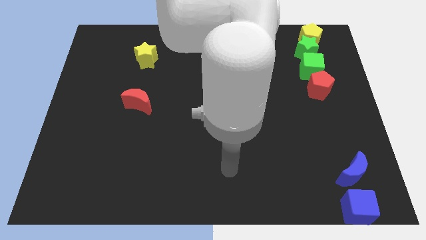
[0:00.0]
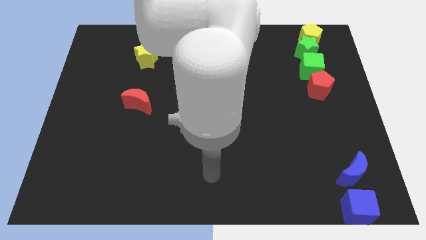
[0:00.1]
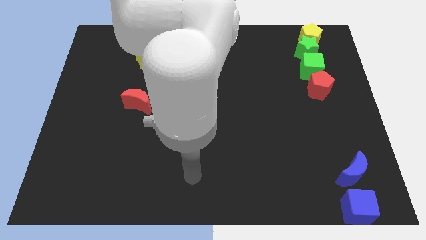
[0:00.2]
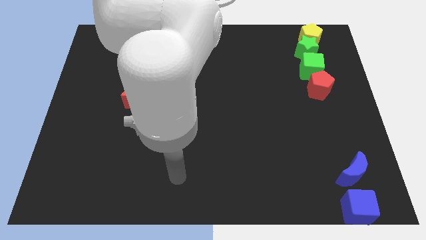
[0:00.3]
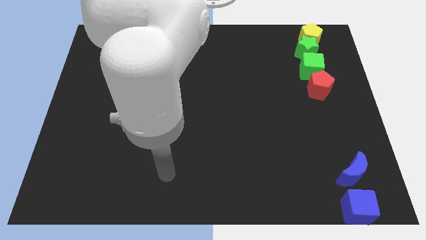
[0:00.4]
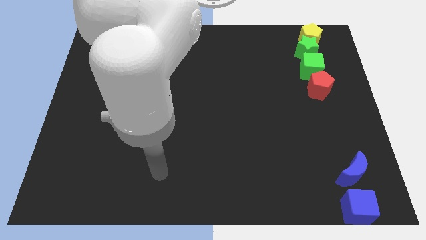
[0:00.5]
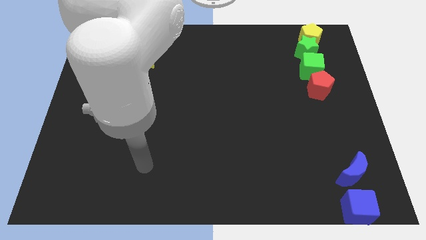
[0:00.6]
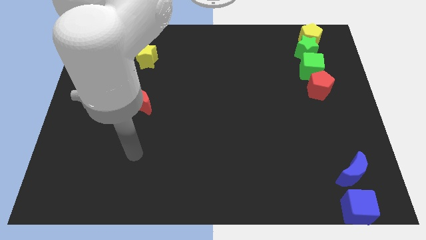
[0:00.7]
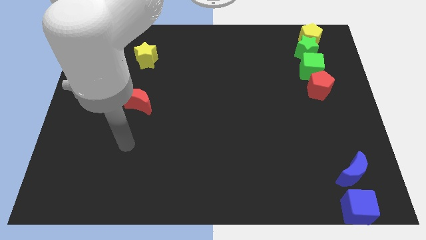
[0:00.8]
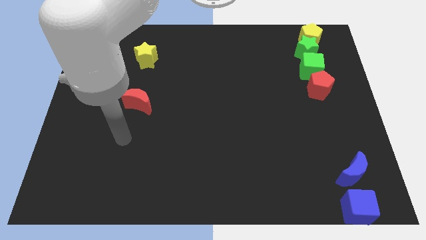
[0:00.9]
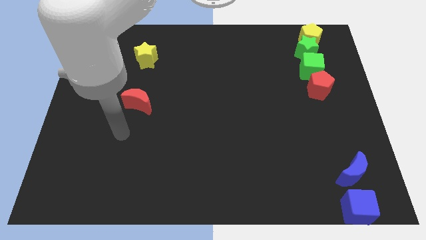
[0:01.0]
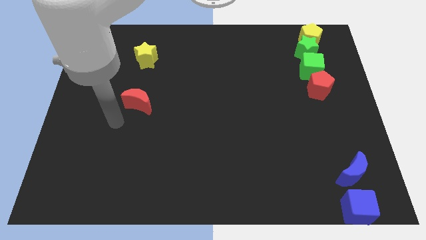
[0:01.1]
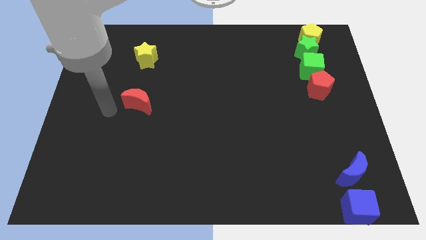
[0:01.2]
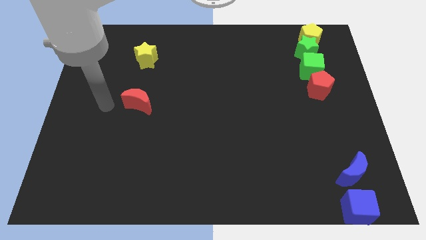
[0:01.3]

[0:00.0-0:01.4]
place arm to the left of the red moon

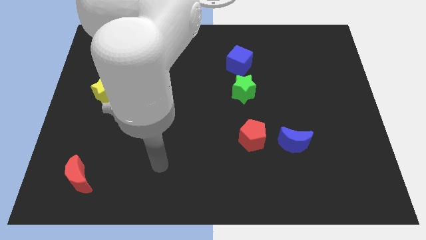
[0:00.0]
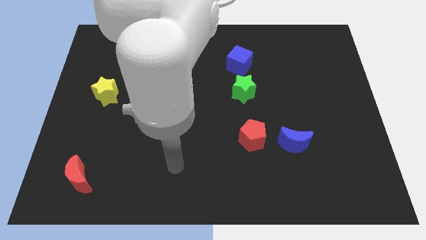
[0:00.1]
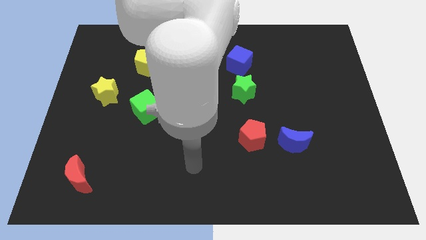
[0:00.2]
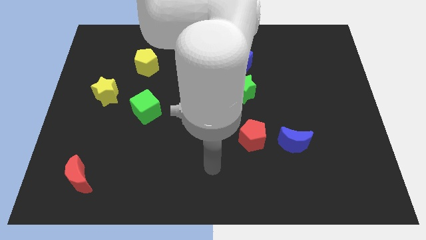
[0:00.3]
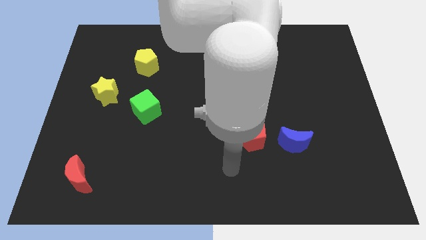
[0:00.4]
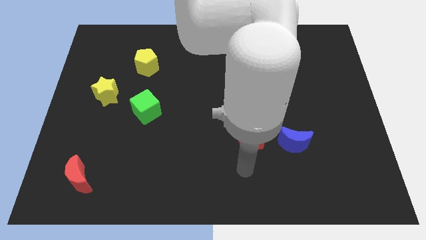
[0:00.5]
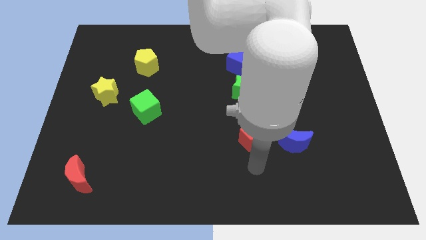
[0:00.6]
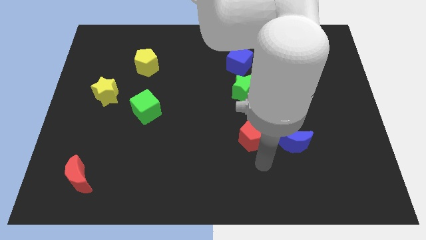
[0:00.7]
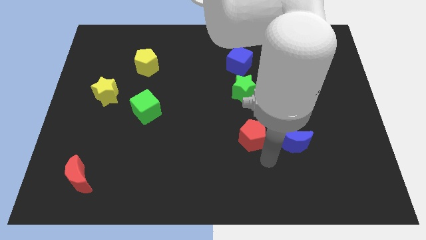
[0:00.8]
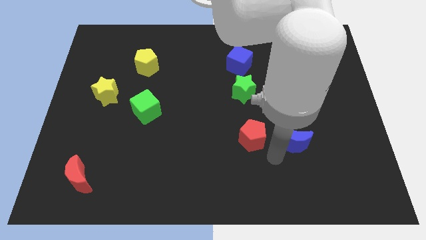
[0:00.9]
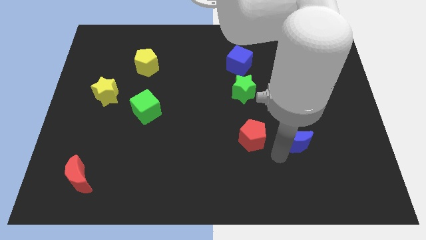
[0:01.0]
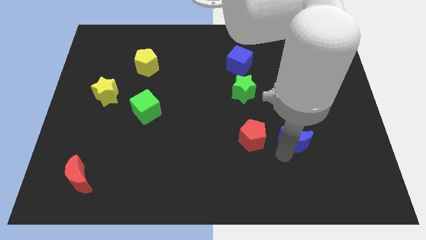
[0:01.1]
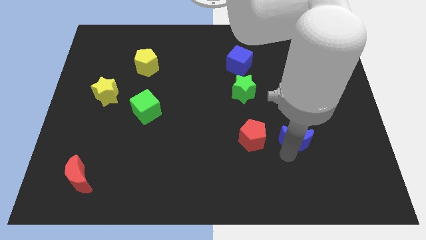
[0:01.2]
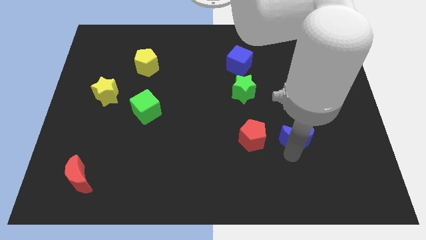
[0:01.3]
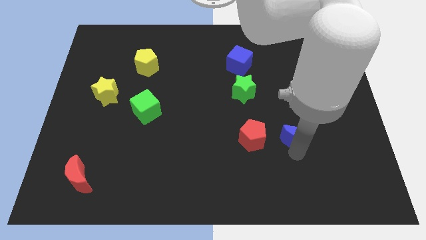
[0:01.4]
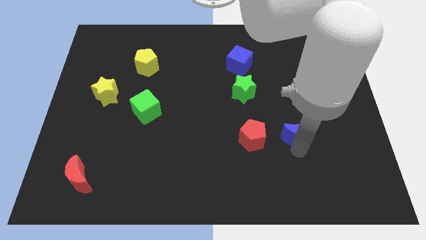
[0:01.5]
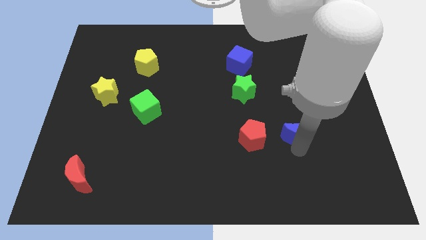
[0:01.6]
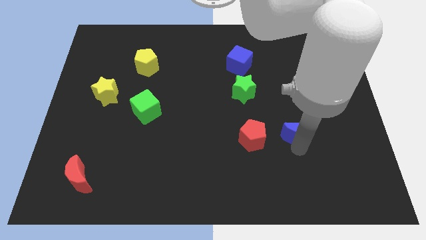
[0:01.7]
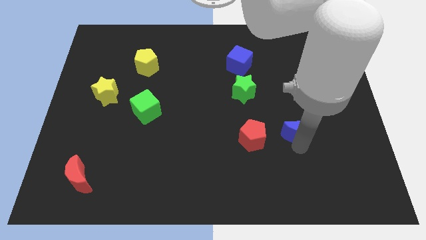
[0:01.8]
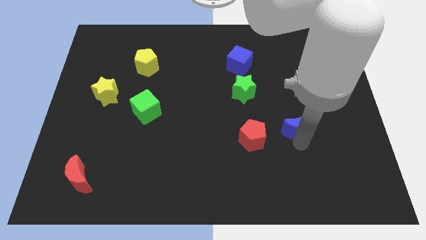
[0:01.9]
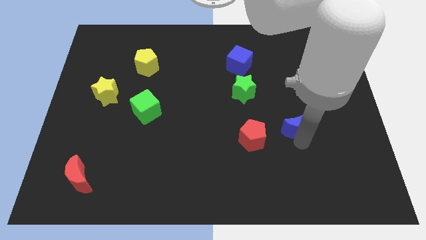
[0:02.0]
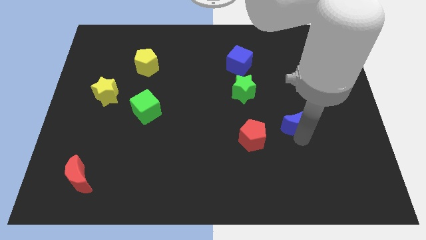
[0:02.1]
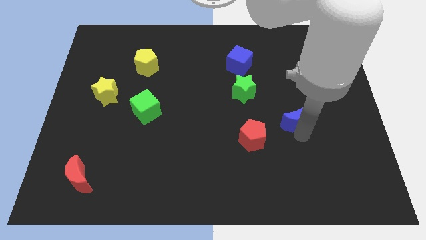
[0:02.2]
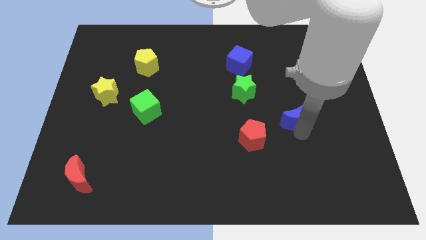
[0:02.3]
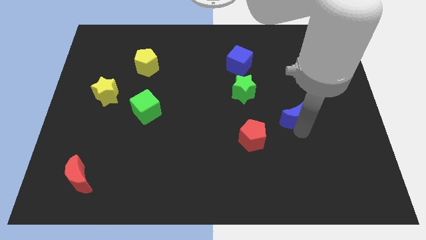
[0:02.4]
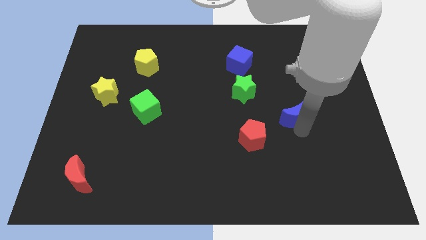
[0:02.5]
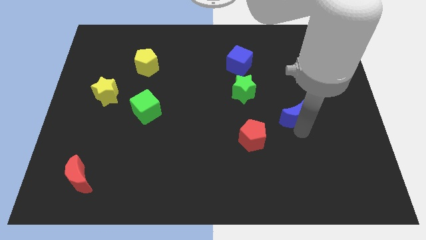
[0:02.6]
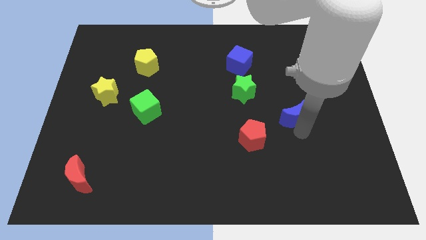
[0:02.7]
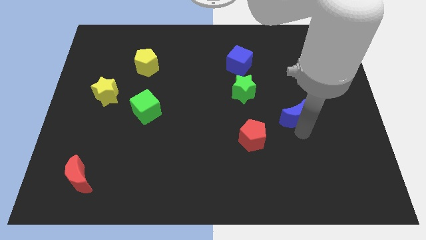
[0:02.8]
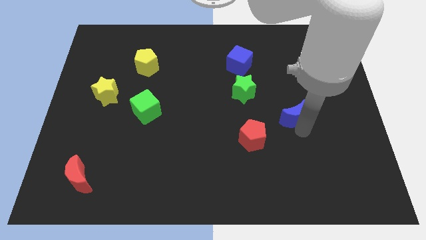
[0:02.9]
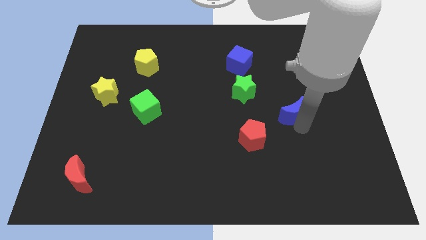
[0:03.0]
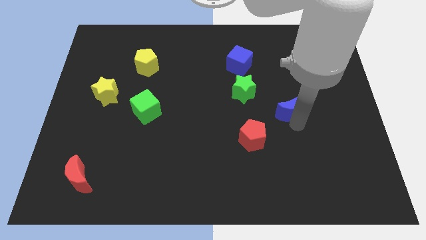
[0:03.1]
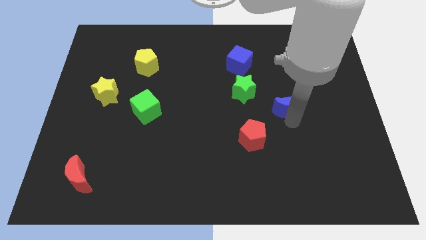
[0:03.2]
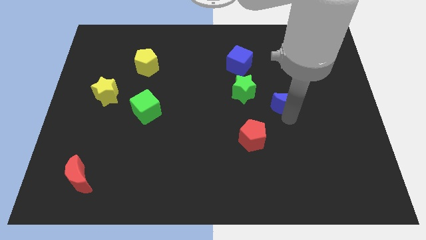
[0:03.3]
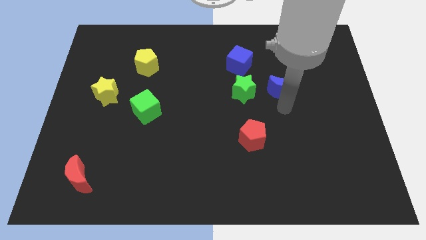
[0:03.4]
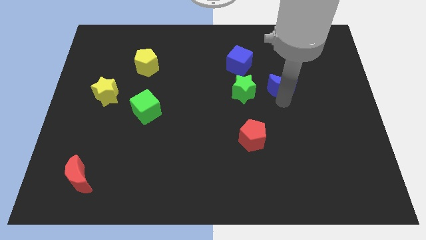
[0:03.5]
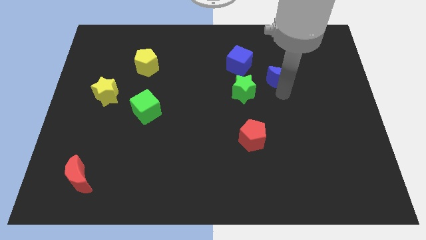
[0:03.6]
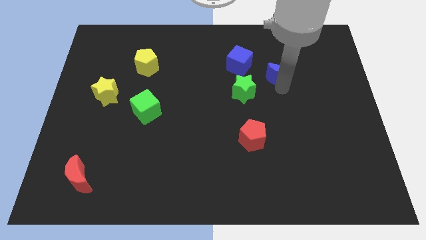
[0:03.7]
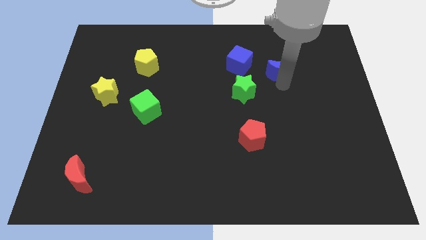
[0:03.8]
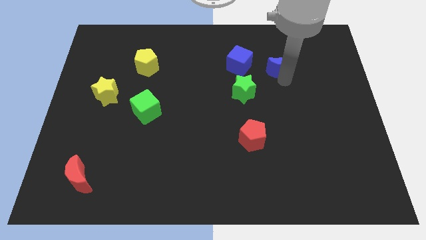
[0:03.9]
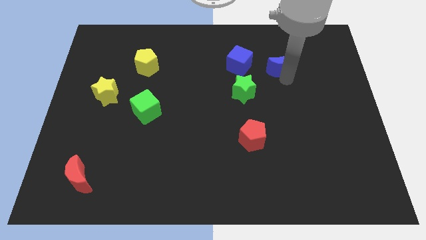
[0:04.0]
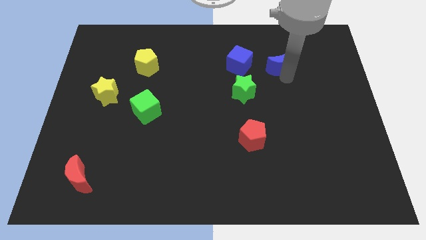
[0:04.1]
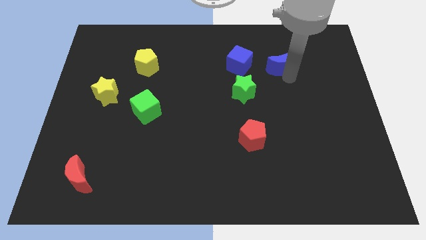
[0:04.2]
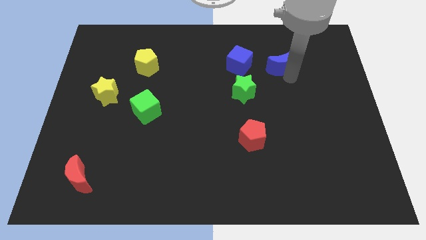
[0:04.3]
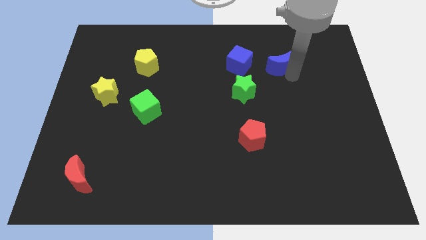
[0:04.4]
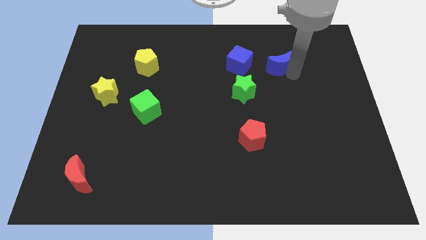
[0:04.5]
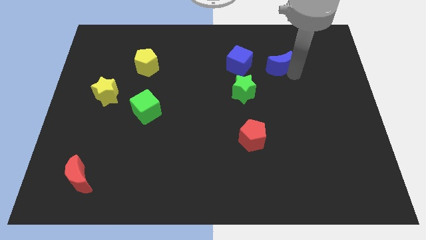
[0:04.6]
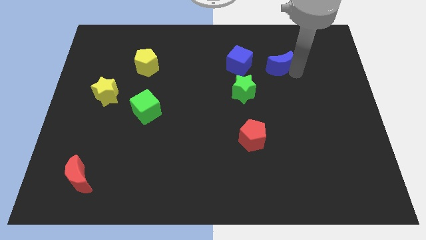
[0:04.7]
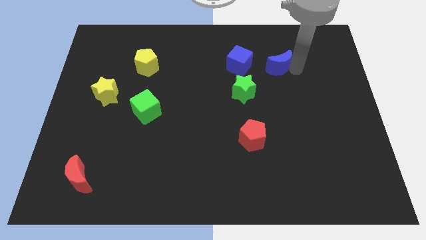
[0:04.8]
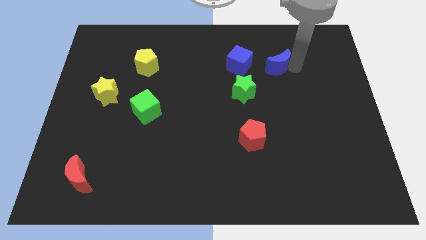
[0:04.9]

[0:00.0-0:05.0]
move the blue crescent right beside blue cube

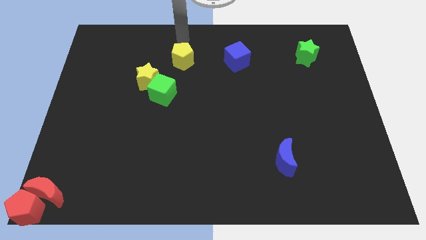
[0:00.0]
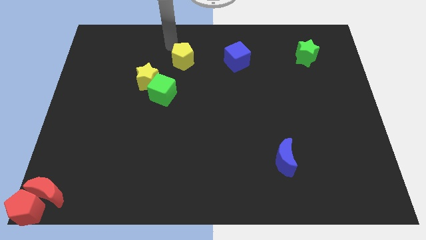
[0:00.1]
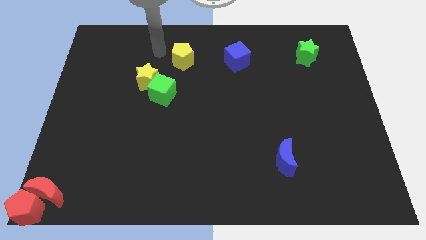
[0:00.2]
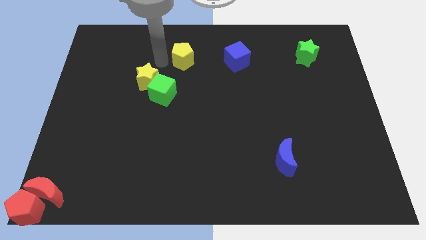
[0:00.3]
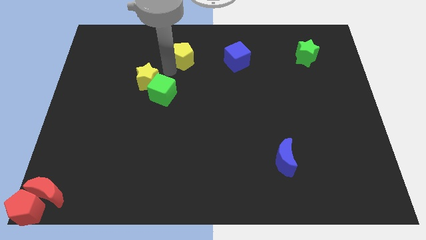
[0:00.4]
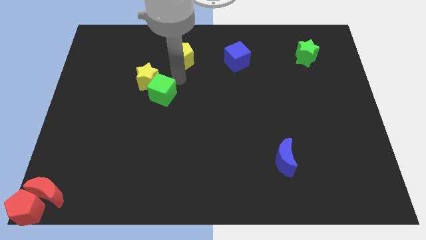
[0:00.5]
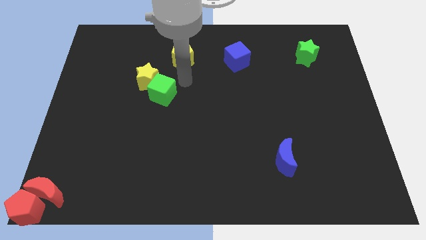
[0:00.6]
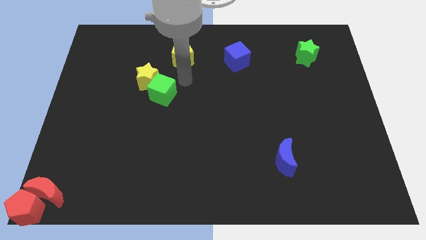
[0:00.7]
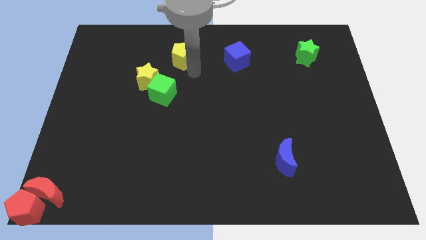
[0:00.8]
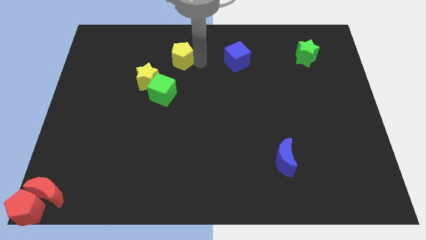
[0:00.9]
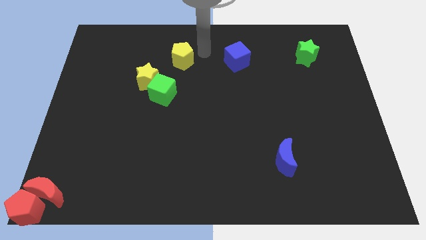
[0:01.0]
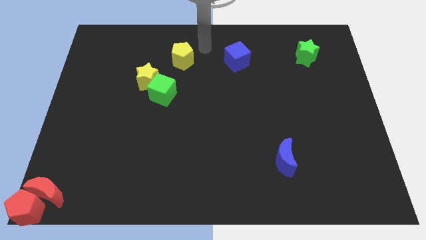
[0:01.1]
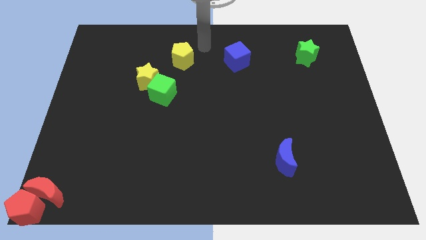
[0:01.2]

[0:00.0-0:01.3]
move your arm towards the top center of the board

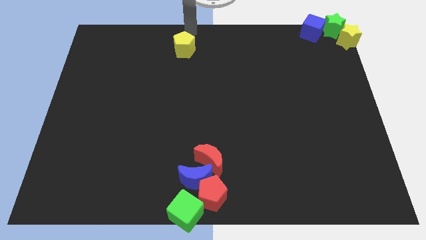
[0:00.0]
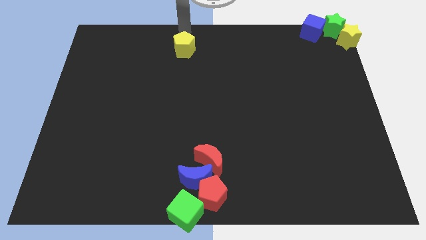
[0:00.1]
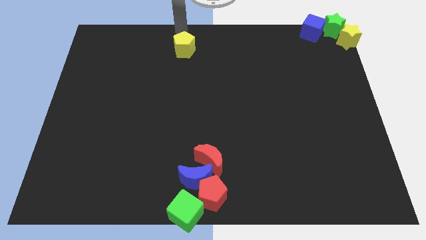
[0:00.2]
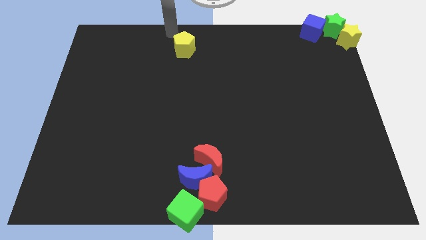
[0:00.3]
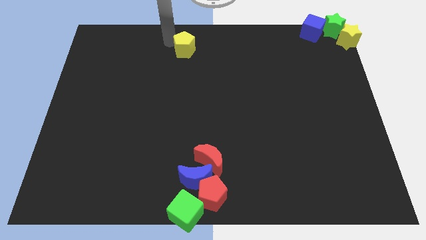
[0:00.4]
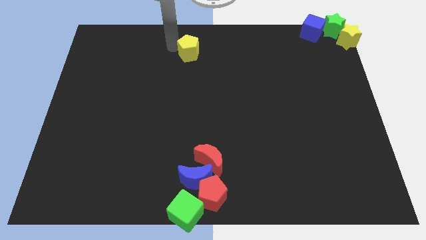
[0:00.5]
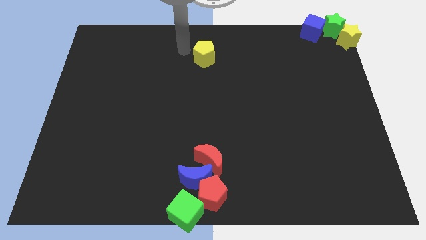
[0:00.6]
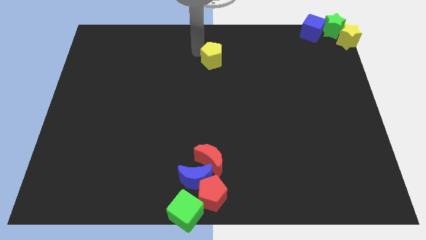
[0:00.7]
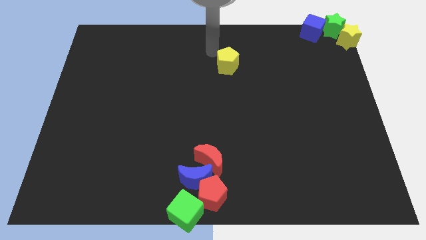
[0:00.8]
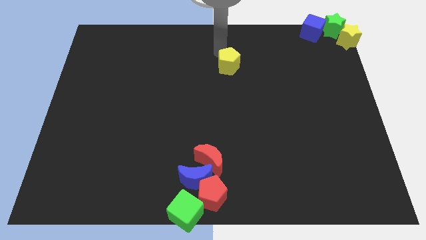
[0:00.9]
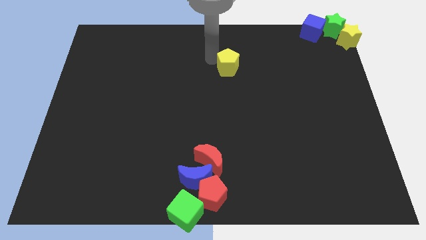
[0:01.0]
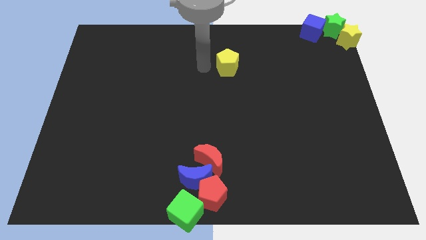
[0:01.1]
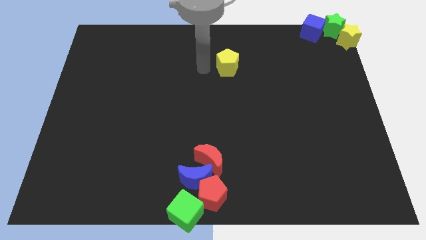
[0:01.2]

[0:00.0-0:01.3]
move the yellow pentagon towards the center of the board
